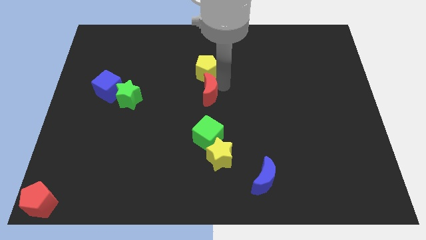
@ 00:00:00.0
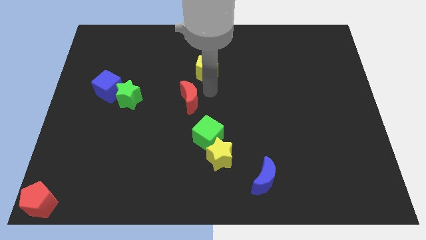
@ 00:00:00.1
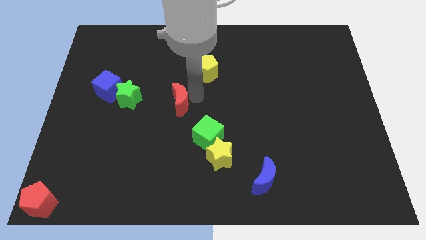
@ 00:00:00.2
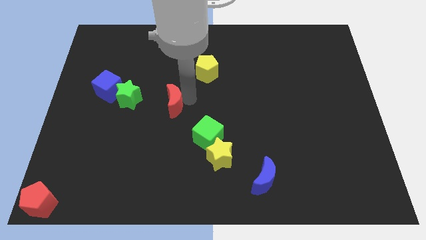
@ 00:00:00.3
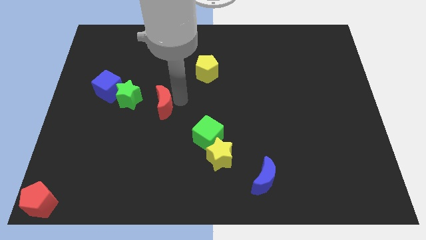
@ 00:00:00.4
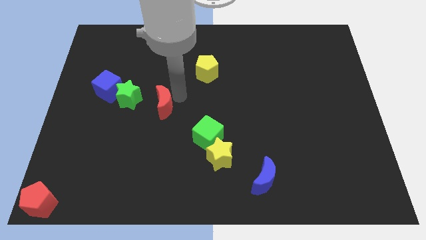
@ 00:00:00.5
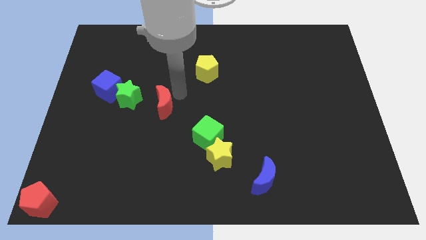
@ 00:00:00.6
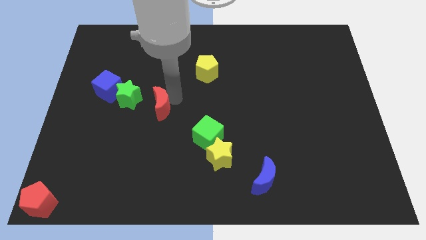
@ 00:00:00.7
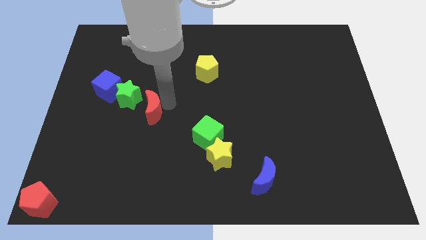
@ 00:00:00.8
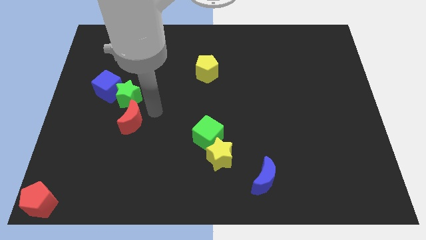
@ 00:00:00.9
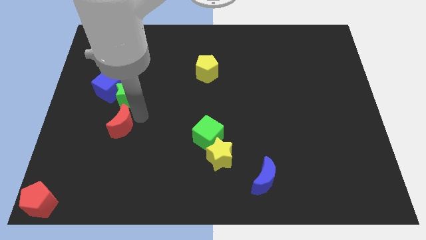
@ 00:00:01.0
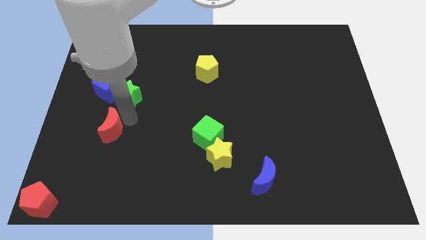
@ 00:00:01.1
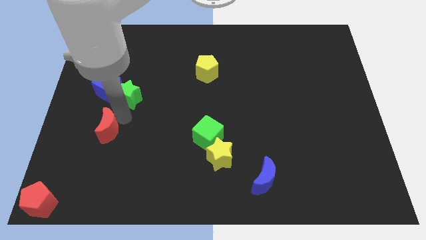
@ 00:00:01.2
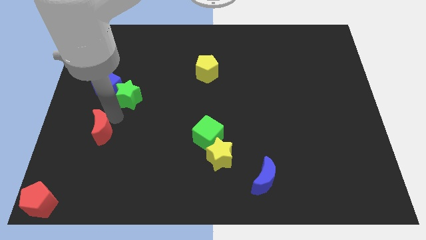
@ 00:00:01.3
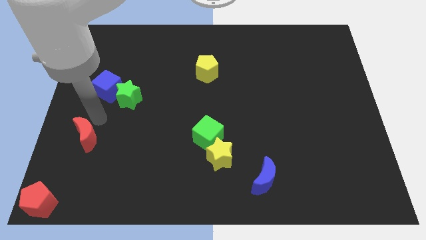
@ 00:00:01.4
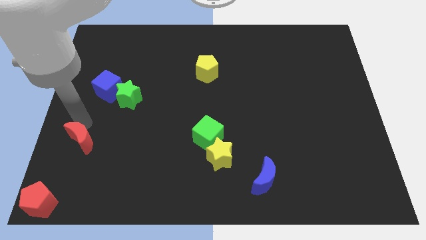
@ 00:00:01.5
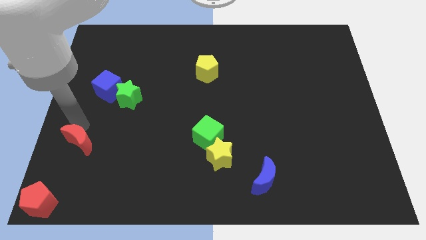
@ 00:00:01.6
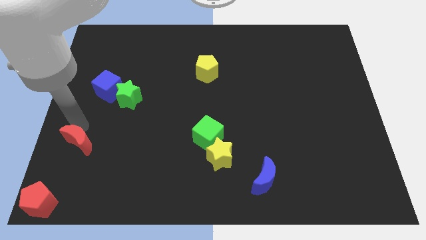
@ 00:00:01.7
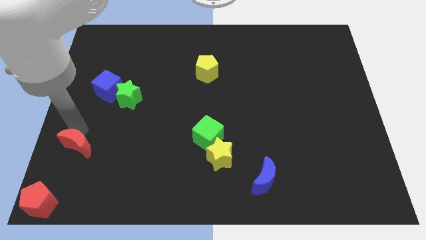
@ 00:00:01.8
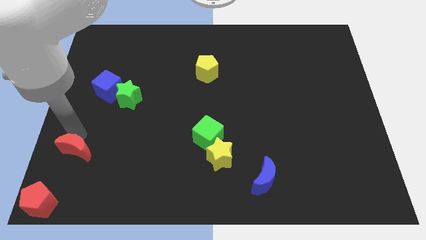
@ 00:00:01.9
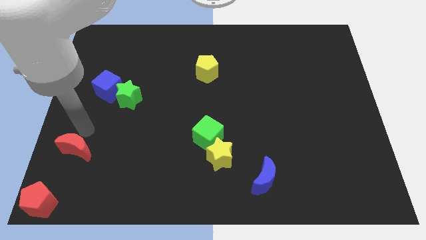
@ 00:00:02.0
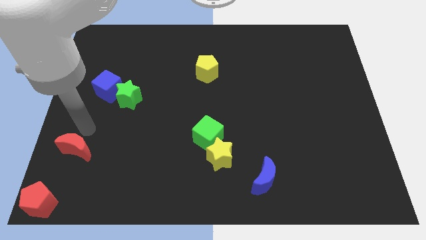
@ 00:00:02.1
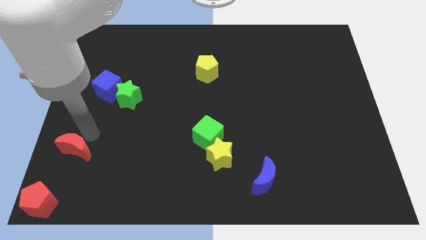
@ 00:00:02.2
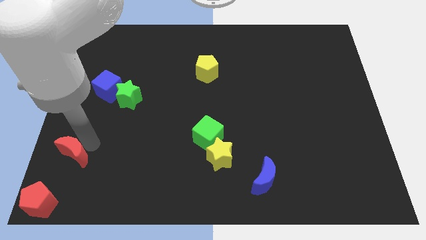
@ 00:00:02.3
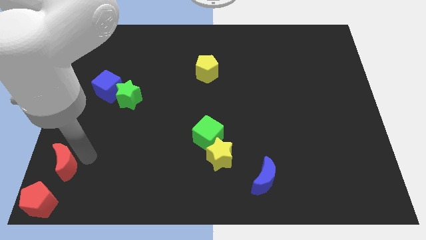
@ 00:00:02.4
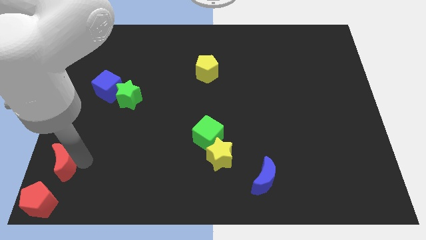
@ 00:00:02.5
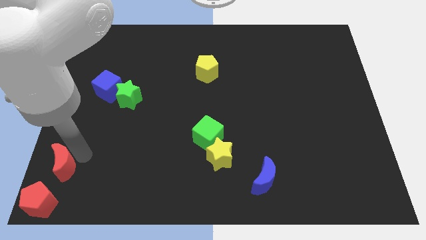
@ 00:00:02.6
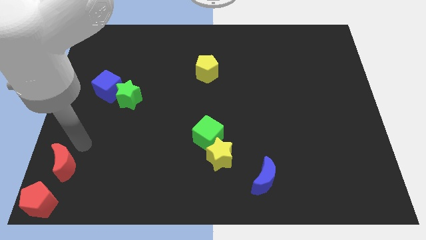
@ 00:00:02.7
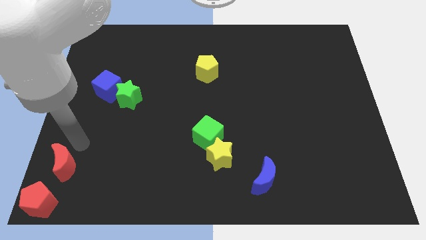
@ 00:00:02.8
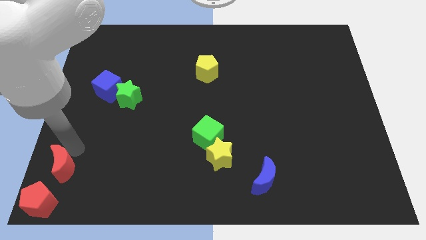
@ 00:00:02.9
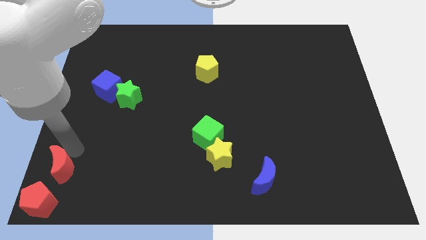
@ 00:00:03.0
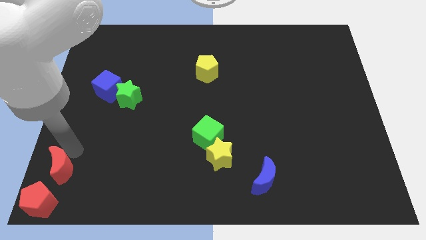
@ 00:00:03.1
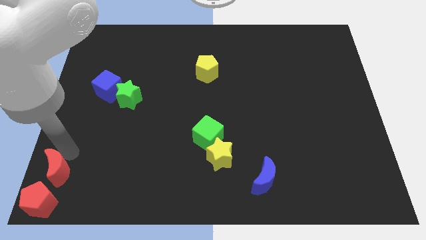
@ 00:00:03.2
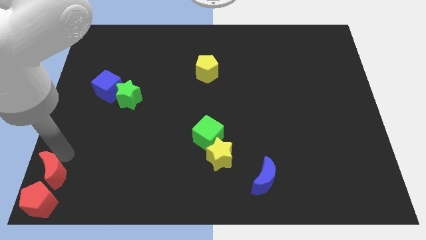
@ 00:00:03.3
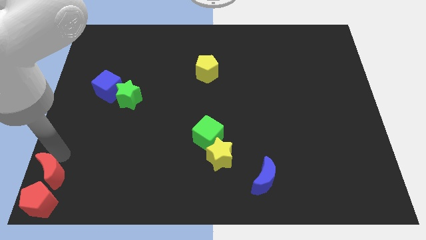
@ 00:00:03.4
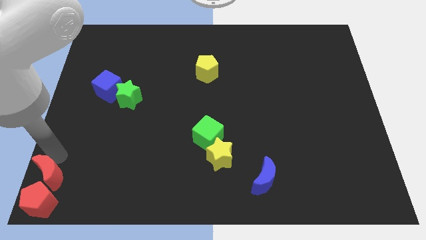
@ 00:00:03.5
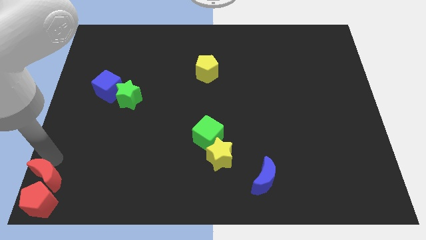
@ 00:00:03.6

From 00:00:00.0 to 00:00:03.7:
place the red crescent above the red penatgon

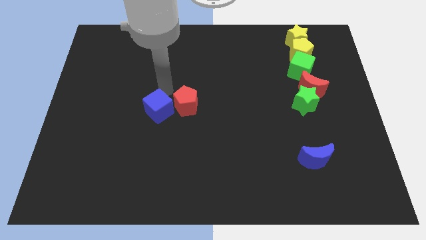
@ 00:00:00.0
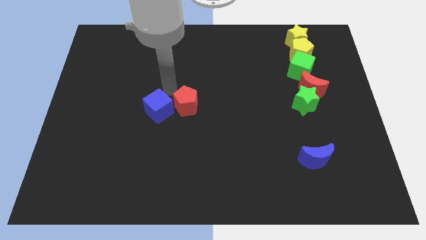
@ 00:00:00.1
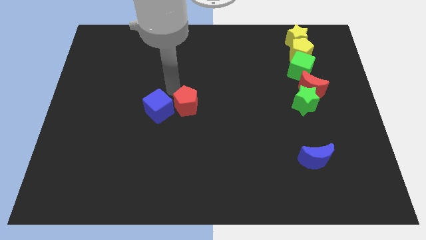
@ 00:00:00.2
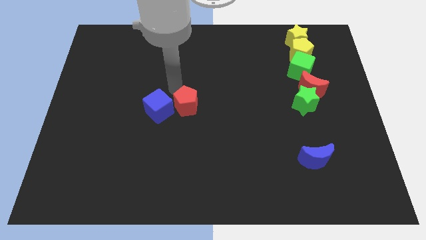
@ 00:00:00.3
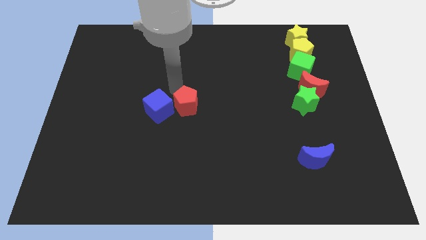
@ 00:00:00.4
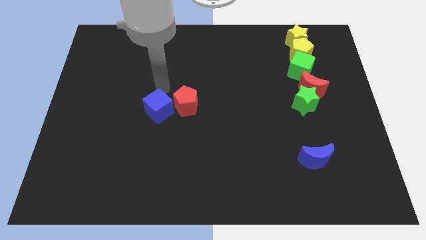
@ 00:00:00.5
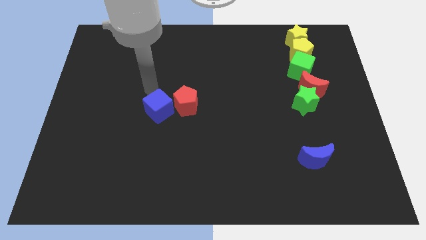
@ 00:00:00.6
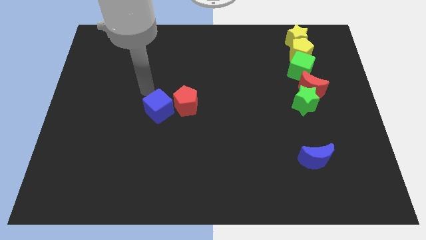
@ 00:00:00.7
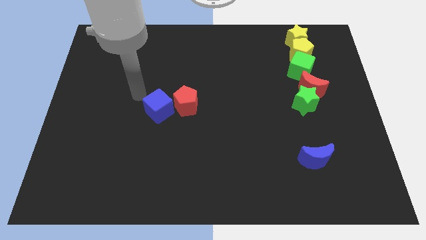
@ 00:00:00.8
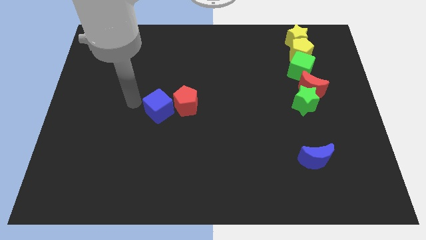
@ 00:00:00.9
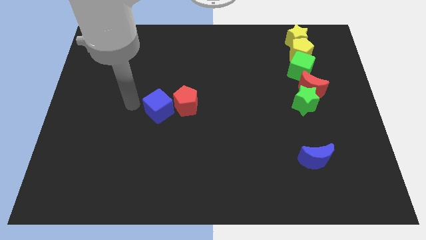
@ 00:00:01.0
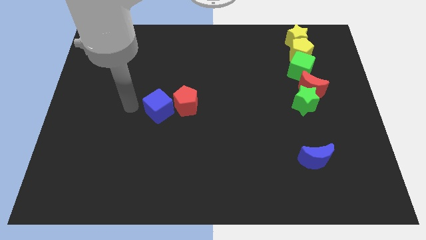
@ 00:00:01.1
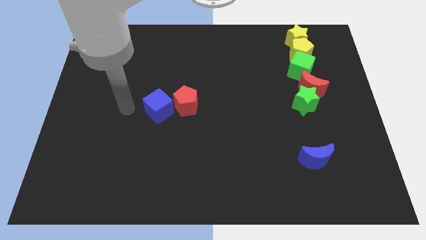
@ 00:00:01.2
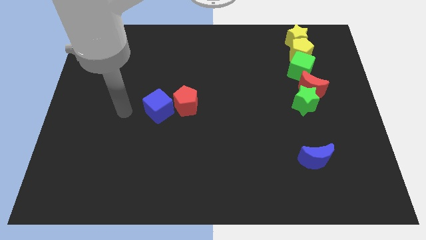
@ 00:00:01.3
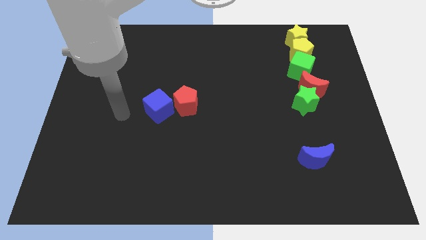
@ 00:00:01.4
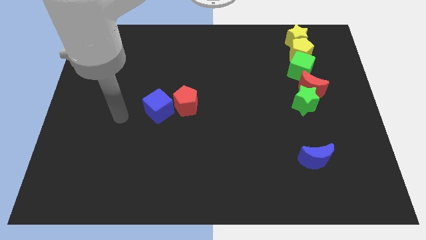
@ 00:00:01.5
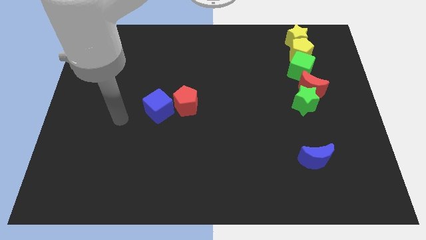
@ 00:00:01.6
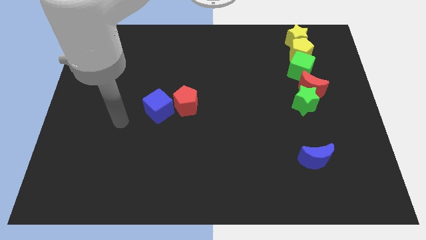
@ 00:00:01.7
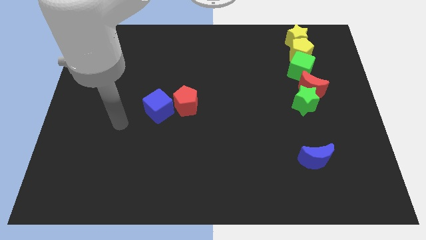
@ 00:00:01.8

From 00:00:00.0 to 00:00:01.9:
place your hand at the left of the blue cube

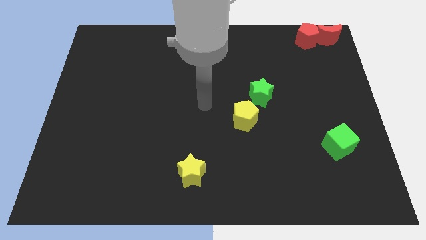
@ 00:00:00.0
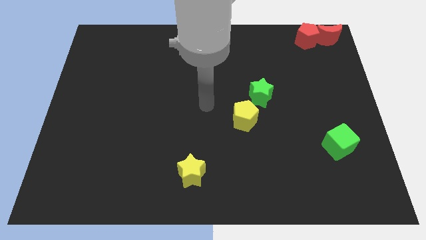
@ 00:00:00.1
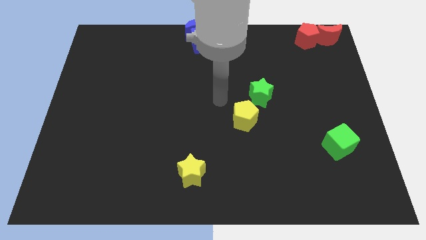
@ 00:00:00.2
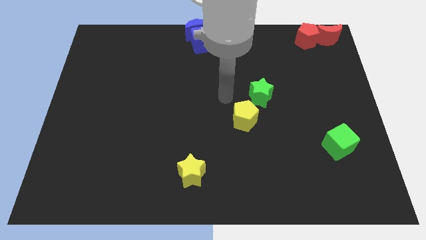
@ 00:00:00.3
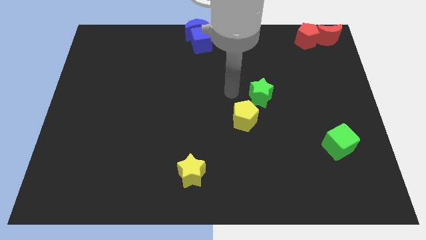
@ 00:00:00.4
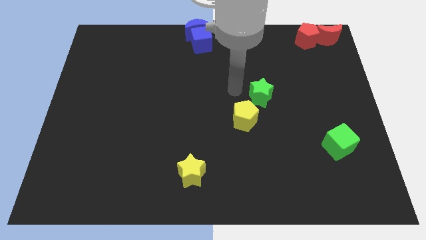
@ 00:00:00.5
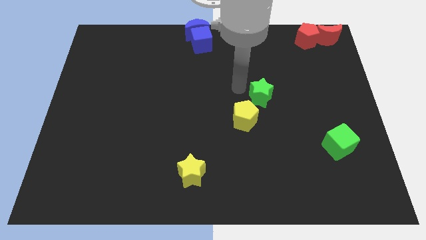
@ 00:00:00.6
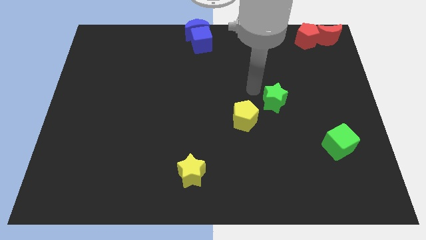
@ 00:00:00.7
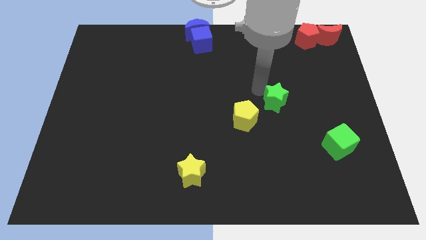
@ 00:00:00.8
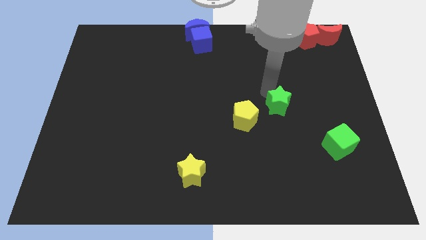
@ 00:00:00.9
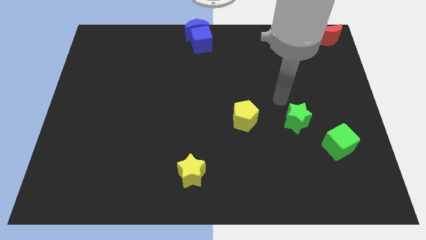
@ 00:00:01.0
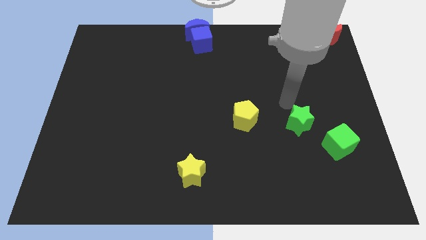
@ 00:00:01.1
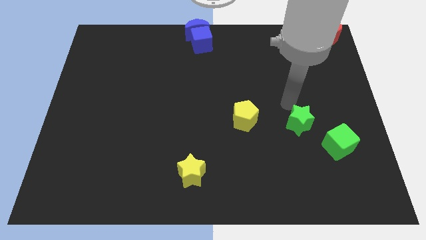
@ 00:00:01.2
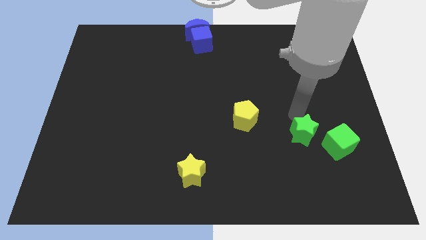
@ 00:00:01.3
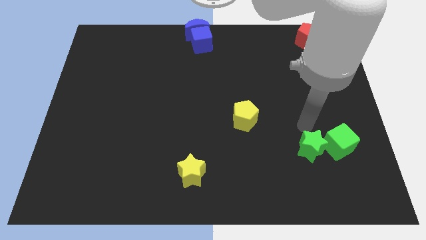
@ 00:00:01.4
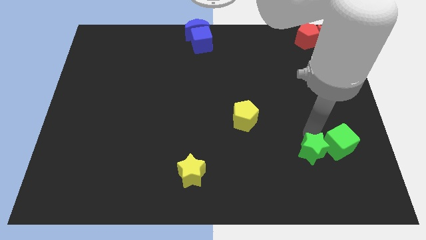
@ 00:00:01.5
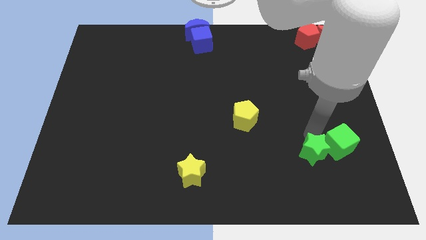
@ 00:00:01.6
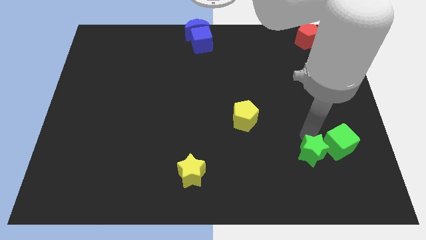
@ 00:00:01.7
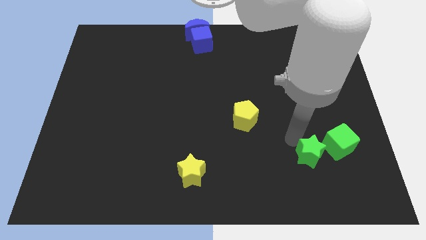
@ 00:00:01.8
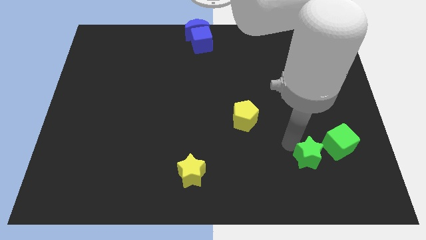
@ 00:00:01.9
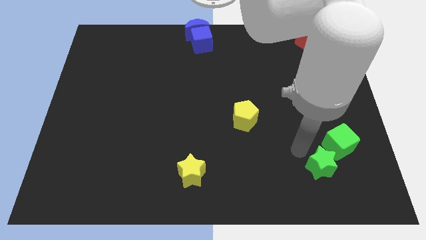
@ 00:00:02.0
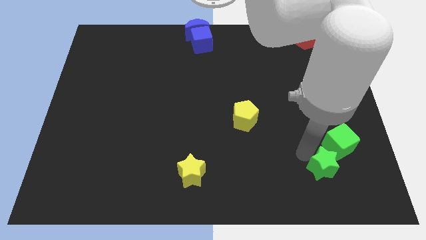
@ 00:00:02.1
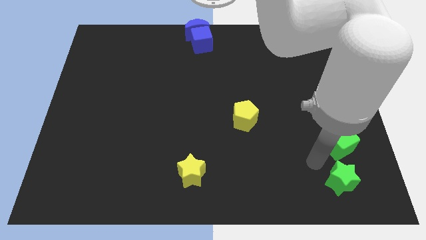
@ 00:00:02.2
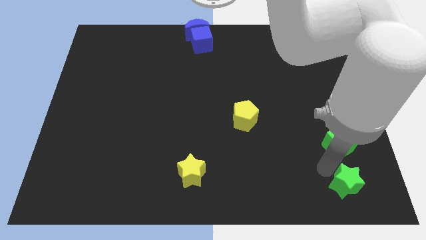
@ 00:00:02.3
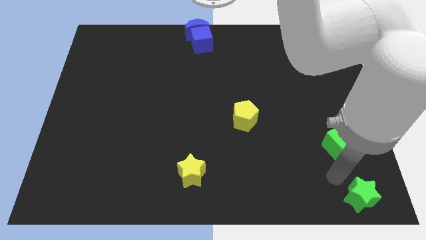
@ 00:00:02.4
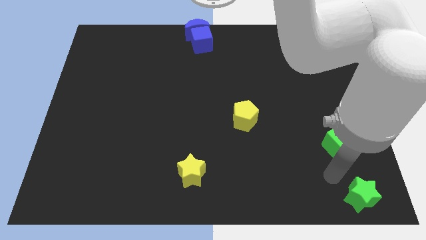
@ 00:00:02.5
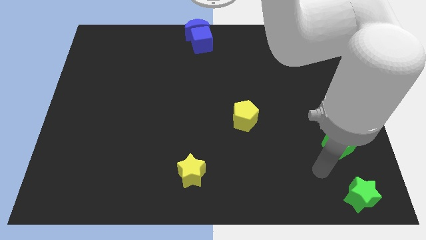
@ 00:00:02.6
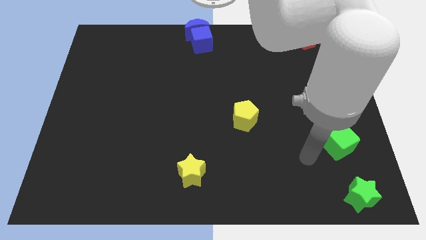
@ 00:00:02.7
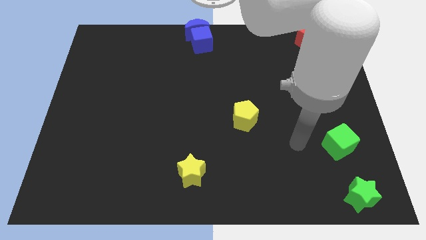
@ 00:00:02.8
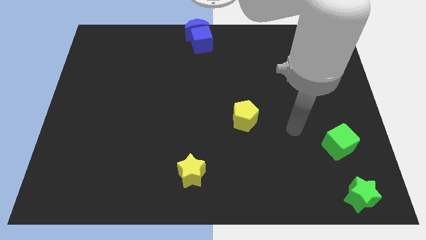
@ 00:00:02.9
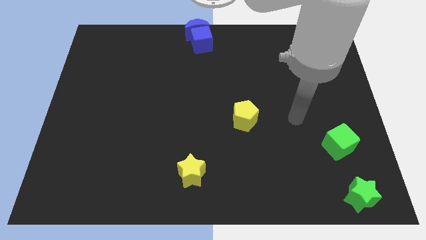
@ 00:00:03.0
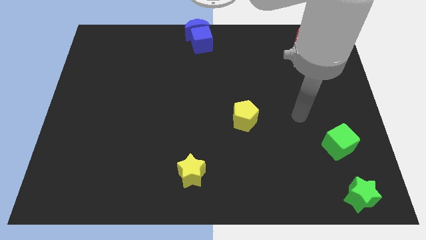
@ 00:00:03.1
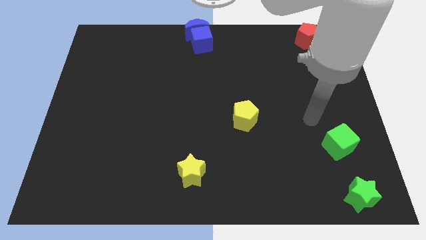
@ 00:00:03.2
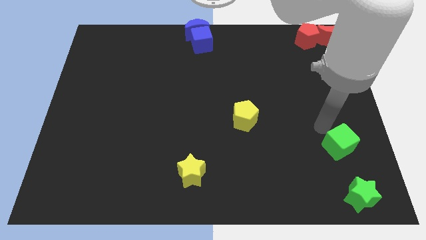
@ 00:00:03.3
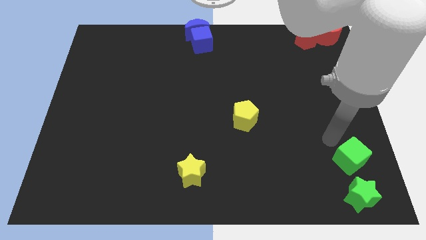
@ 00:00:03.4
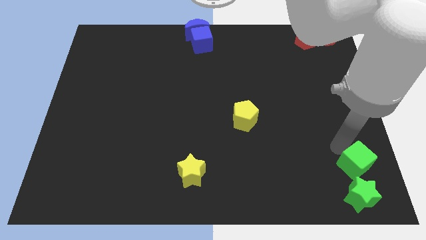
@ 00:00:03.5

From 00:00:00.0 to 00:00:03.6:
move green star to the bottom right
